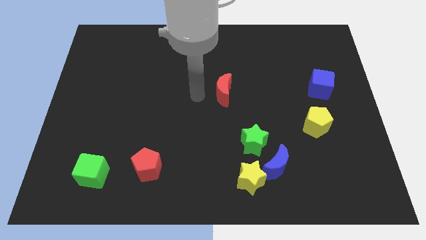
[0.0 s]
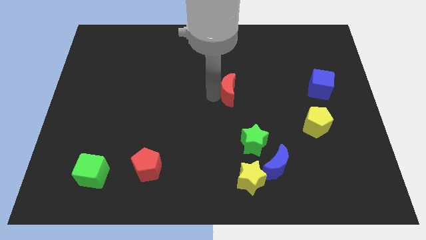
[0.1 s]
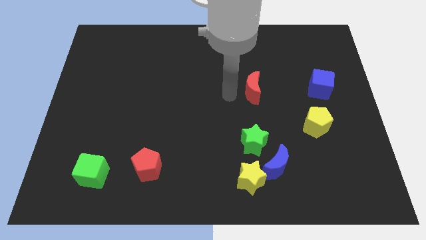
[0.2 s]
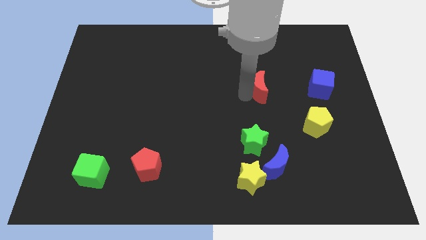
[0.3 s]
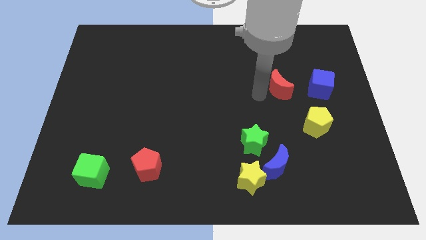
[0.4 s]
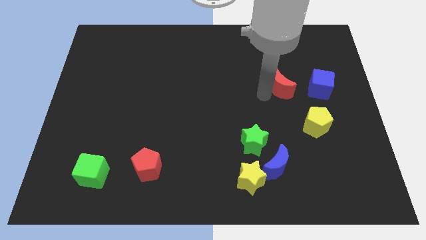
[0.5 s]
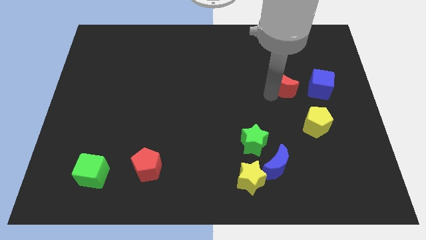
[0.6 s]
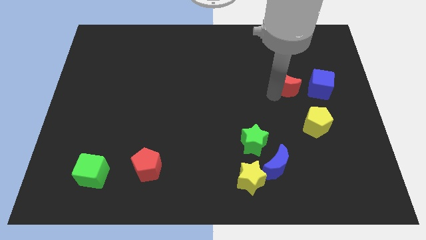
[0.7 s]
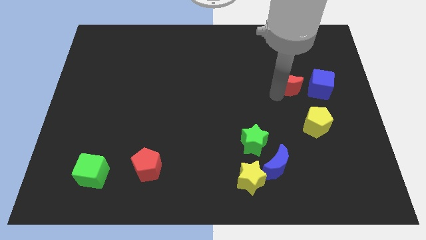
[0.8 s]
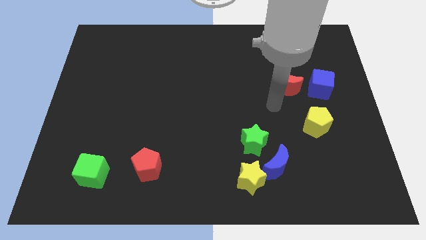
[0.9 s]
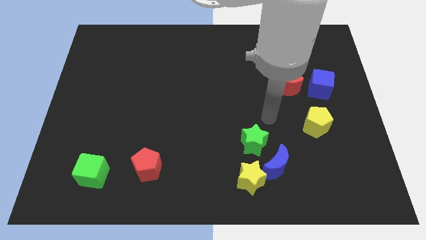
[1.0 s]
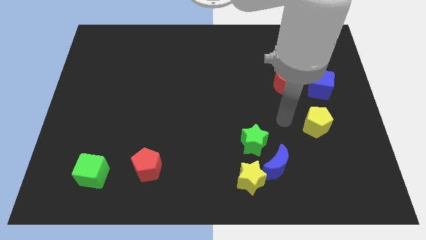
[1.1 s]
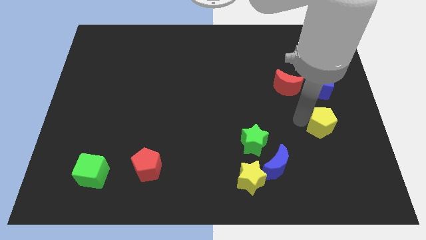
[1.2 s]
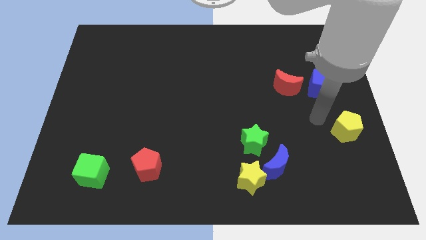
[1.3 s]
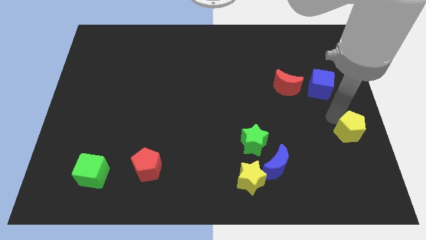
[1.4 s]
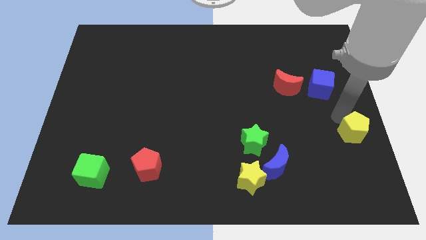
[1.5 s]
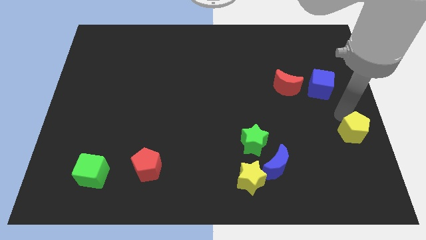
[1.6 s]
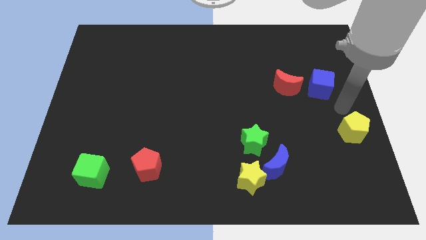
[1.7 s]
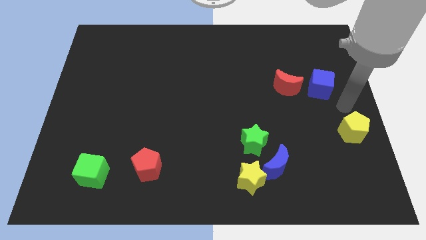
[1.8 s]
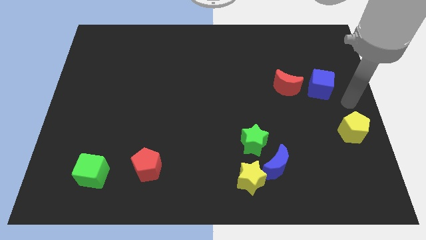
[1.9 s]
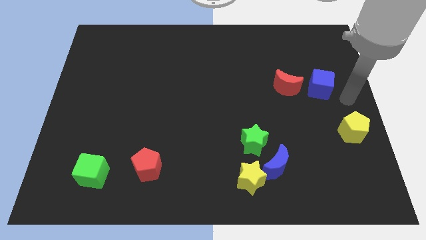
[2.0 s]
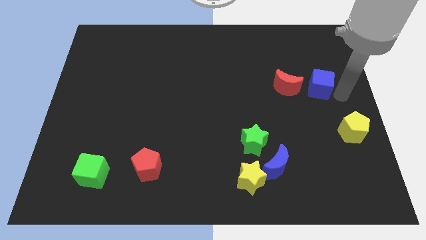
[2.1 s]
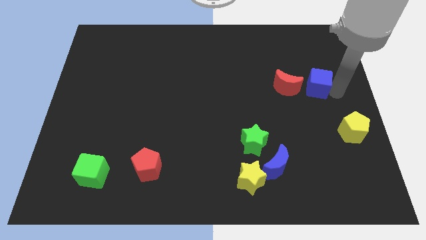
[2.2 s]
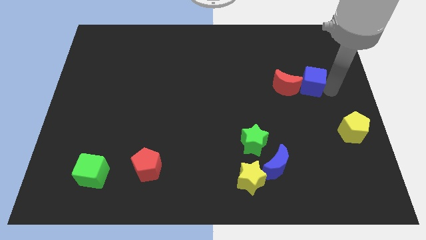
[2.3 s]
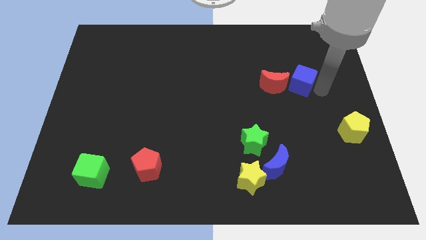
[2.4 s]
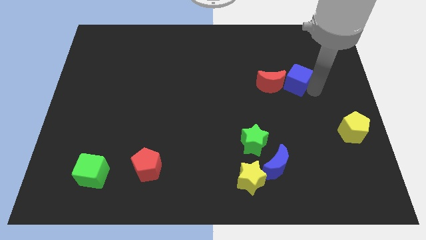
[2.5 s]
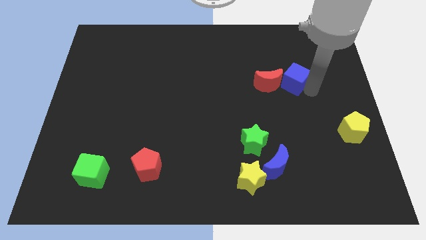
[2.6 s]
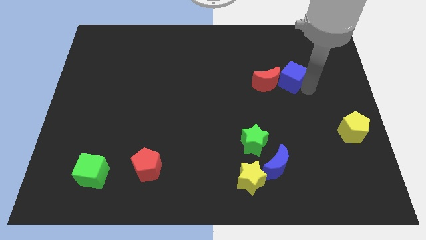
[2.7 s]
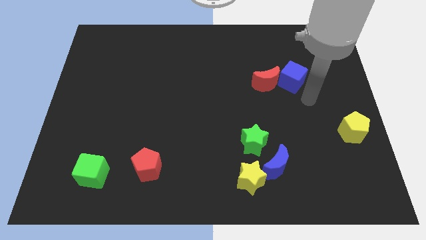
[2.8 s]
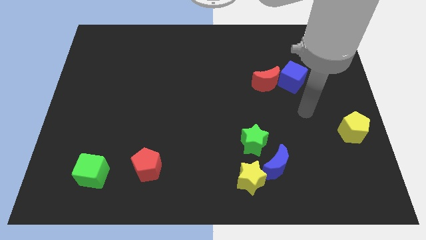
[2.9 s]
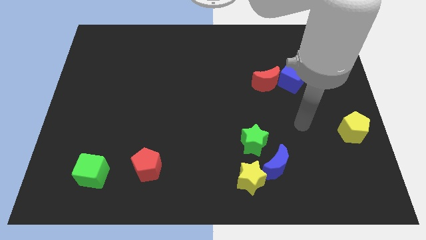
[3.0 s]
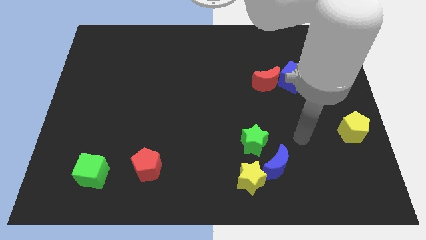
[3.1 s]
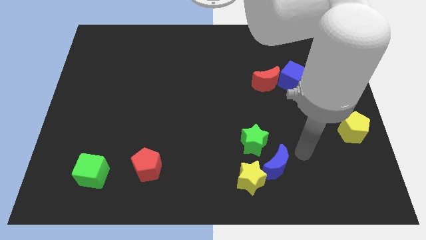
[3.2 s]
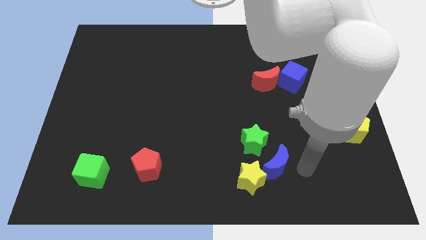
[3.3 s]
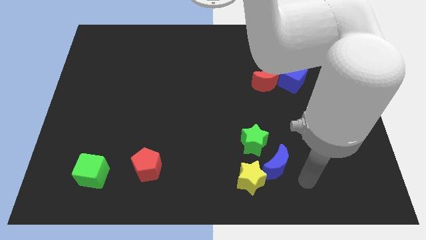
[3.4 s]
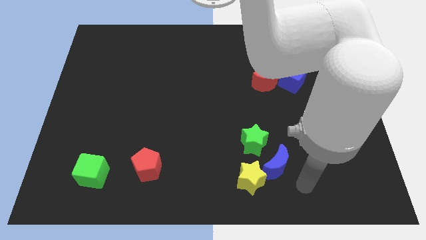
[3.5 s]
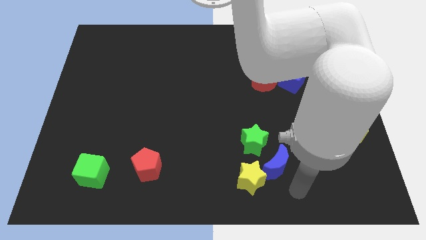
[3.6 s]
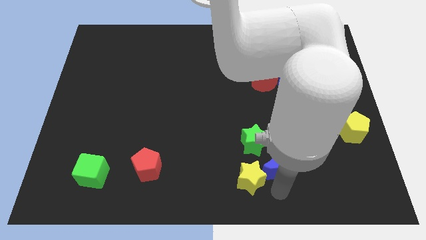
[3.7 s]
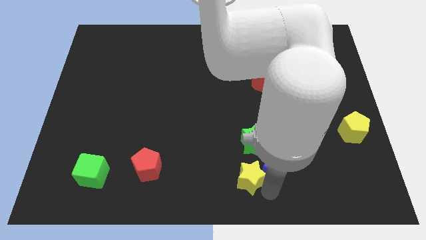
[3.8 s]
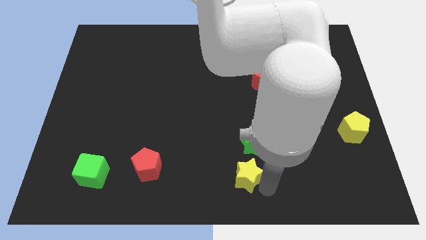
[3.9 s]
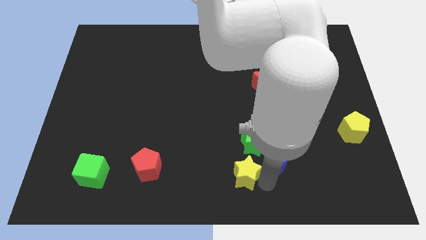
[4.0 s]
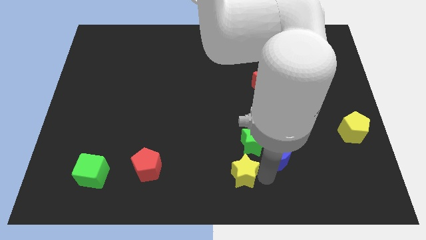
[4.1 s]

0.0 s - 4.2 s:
touch the bottom of blue cube and yellow star

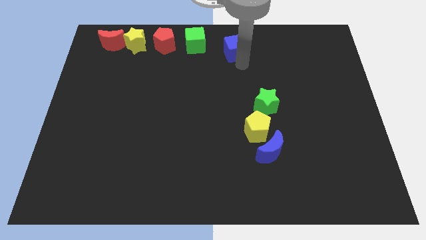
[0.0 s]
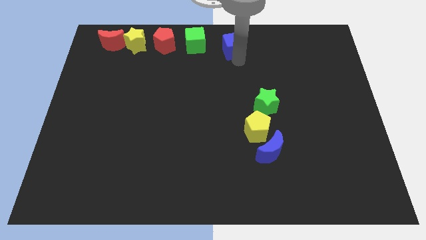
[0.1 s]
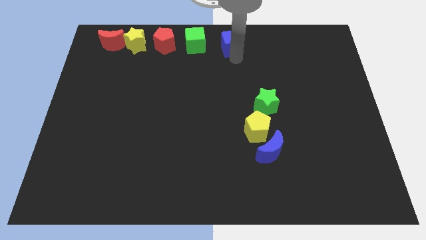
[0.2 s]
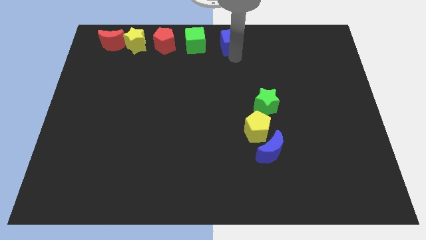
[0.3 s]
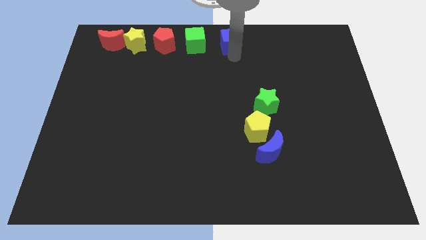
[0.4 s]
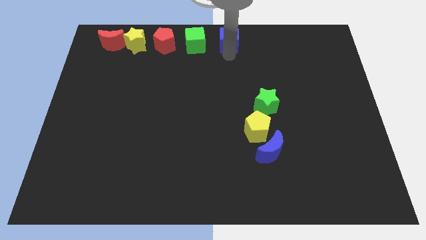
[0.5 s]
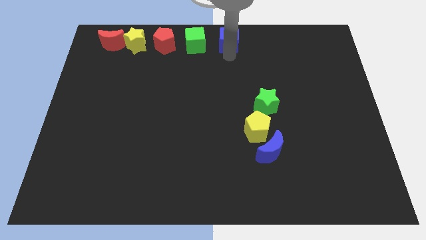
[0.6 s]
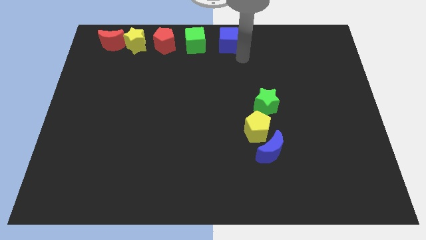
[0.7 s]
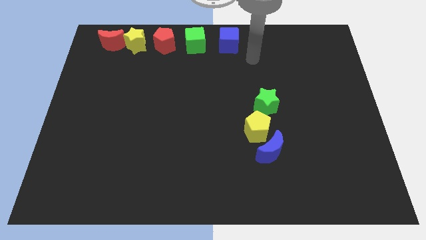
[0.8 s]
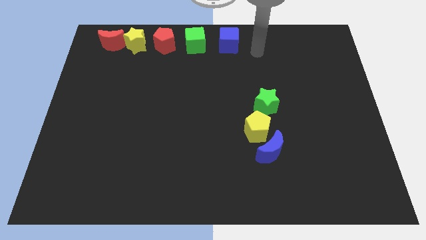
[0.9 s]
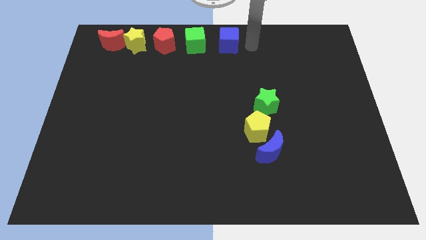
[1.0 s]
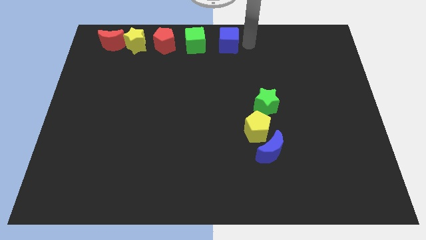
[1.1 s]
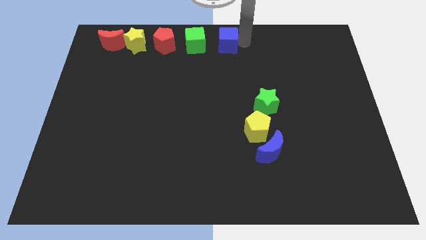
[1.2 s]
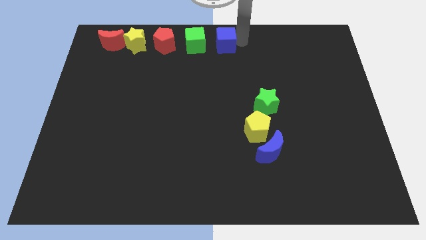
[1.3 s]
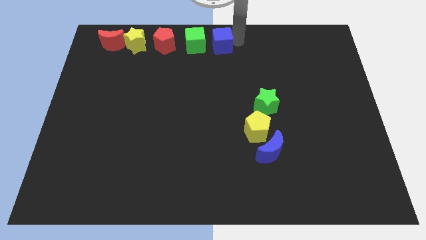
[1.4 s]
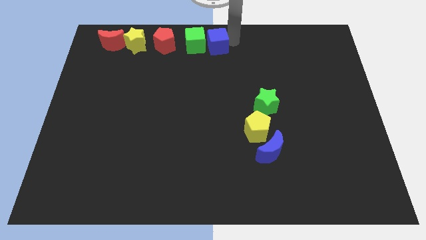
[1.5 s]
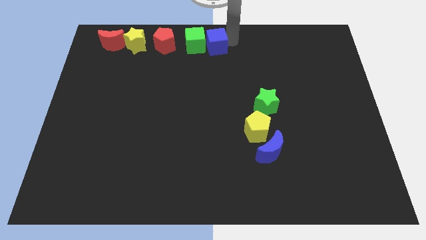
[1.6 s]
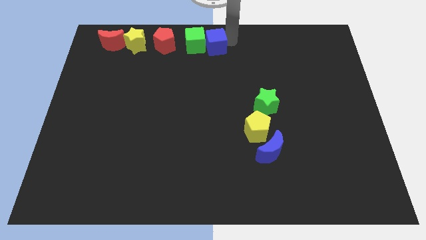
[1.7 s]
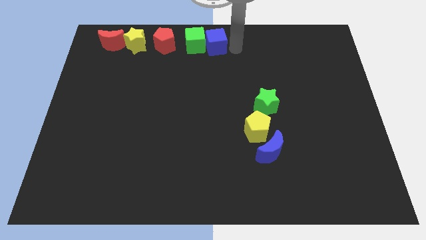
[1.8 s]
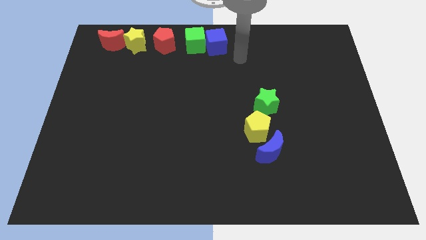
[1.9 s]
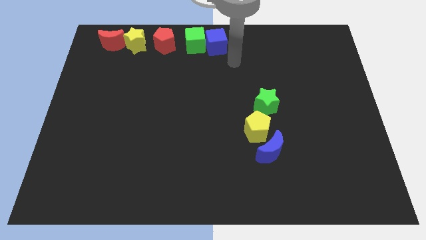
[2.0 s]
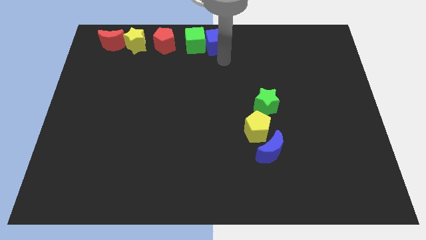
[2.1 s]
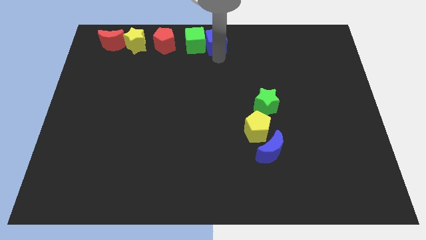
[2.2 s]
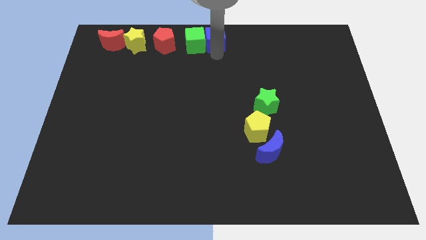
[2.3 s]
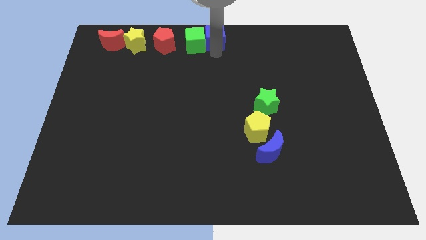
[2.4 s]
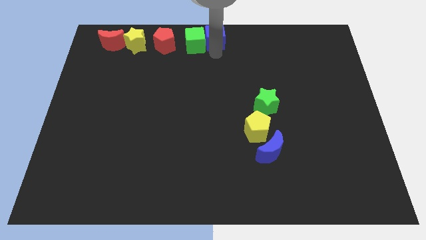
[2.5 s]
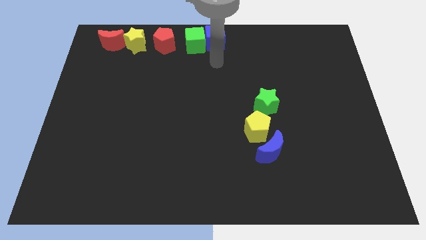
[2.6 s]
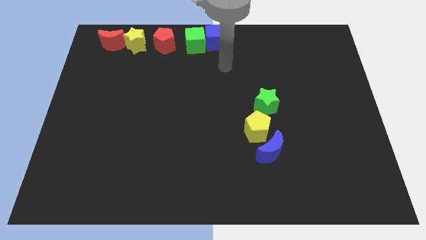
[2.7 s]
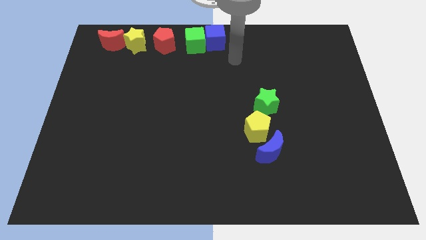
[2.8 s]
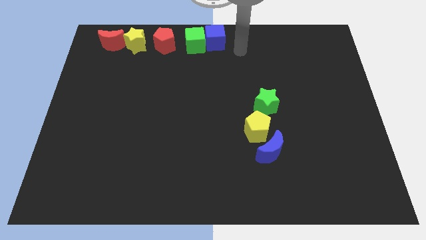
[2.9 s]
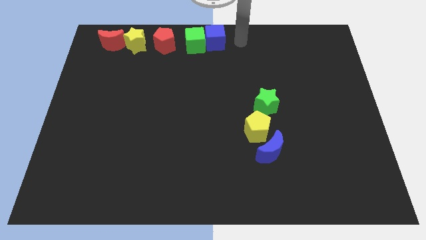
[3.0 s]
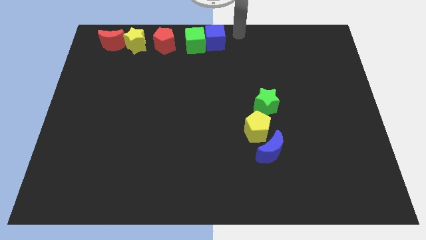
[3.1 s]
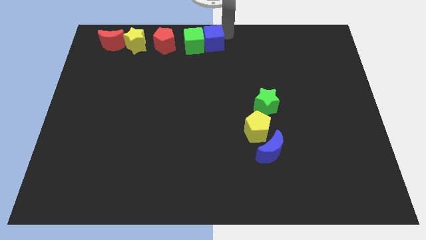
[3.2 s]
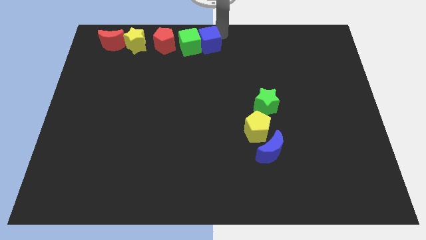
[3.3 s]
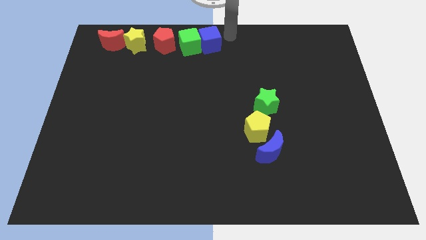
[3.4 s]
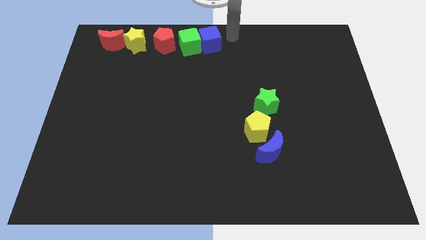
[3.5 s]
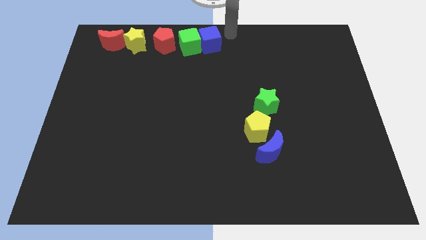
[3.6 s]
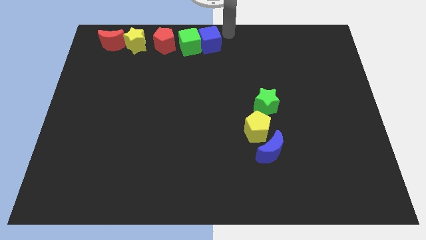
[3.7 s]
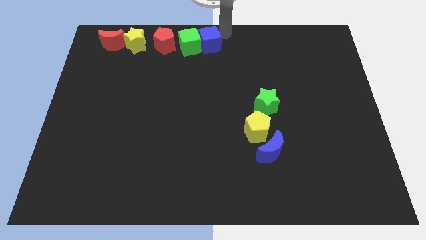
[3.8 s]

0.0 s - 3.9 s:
move blue cube close to the green cube

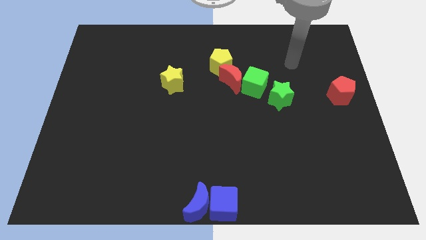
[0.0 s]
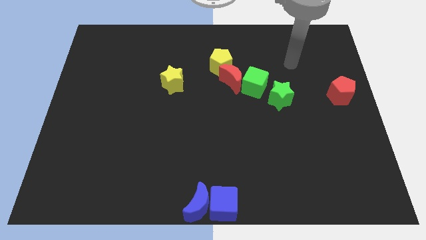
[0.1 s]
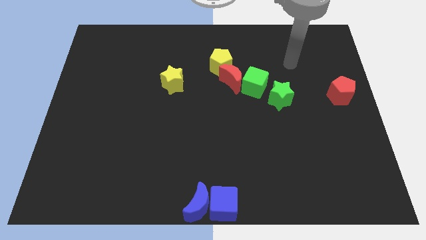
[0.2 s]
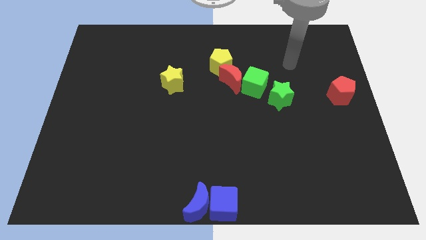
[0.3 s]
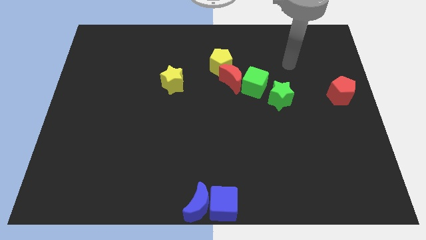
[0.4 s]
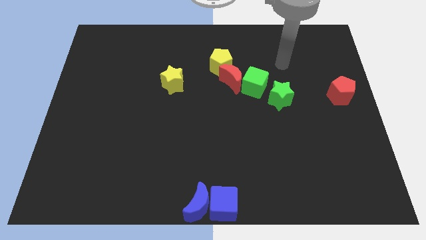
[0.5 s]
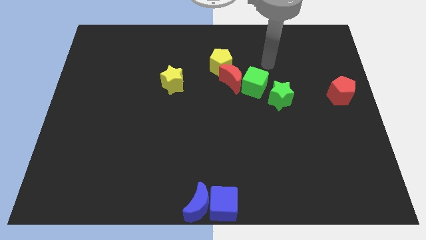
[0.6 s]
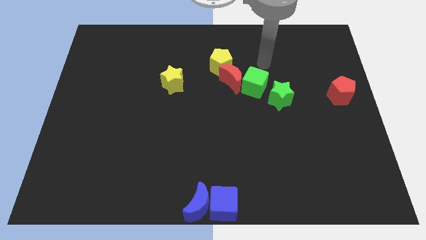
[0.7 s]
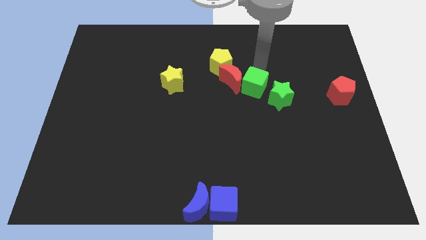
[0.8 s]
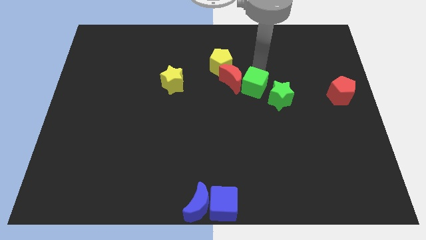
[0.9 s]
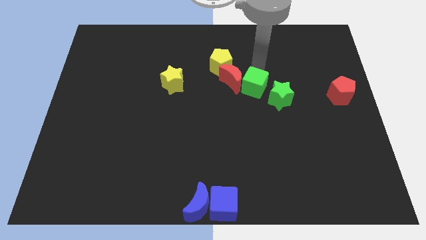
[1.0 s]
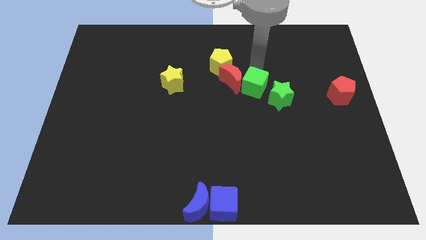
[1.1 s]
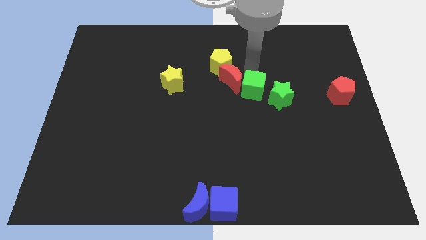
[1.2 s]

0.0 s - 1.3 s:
tap the green cube slightly downwards
